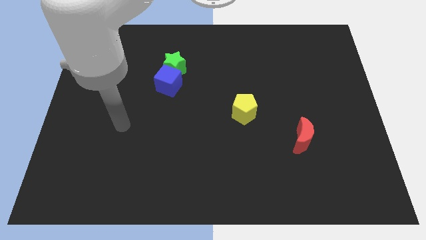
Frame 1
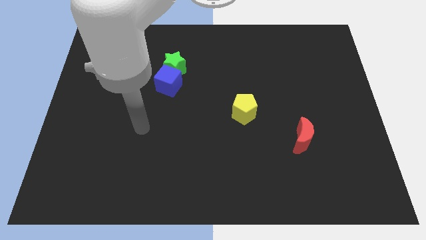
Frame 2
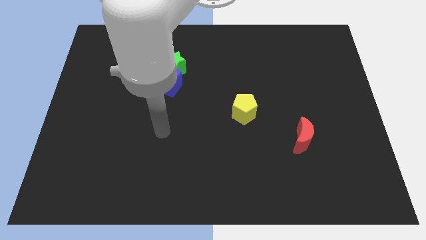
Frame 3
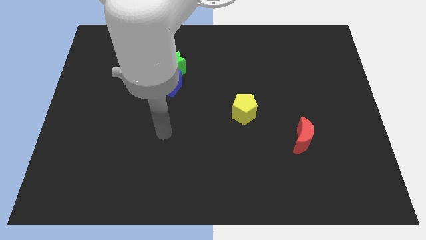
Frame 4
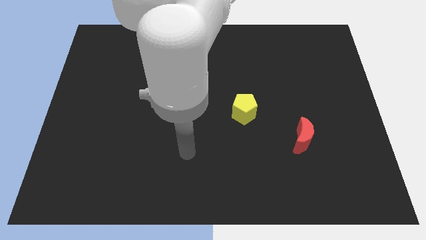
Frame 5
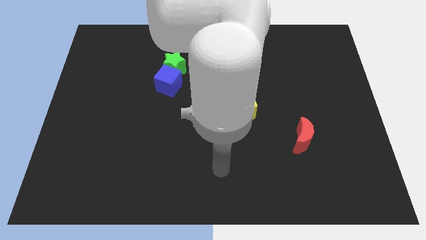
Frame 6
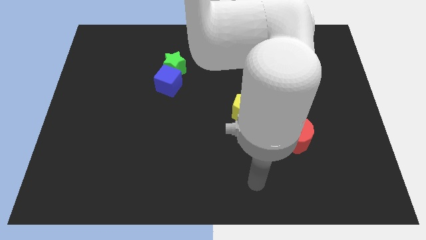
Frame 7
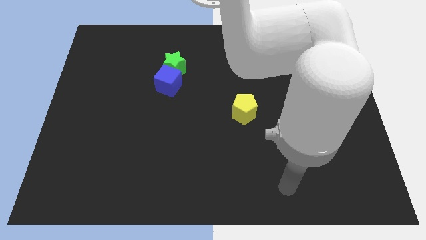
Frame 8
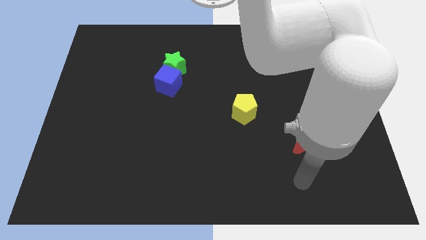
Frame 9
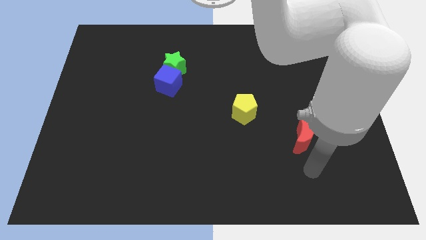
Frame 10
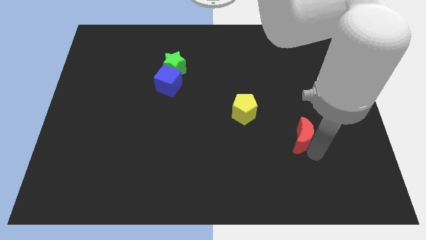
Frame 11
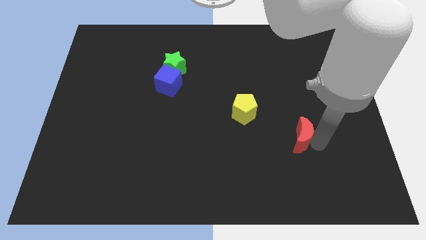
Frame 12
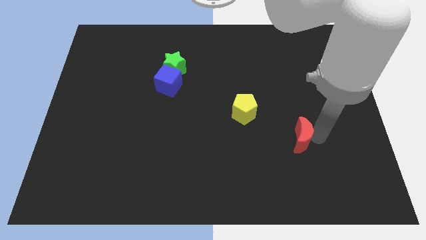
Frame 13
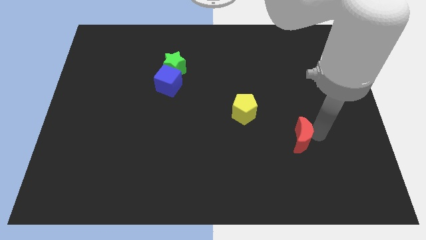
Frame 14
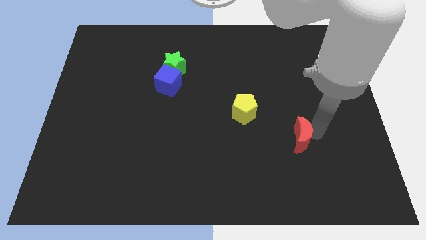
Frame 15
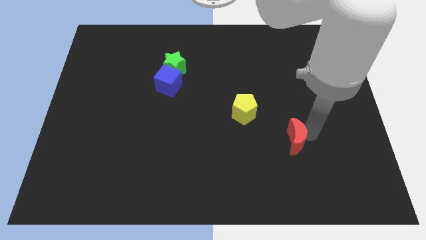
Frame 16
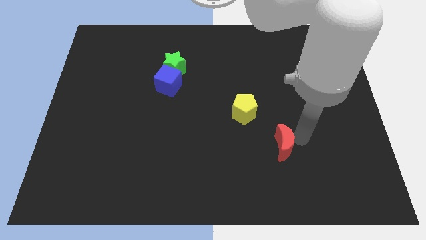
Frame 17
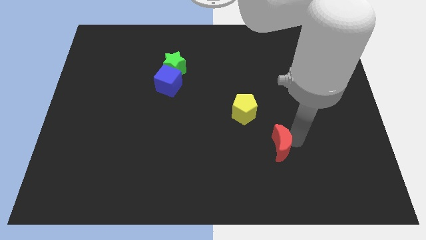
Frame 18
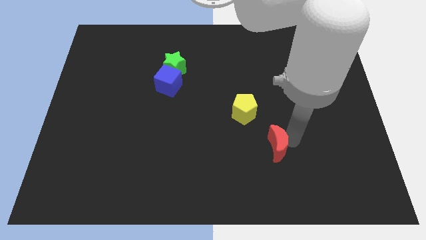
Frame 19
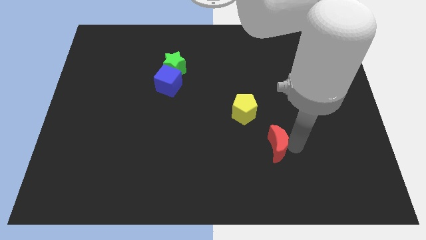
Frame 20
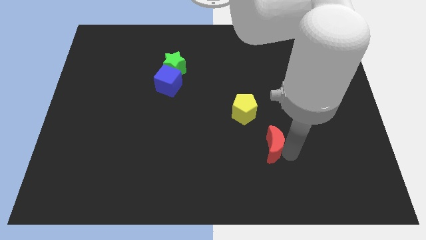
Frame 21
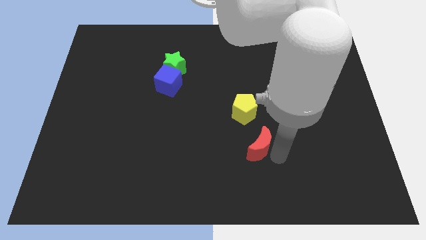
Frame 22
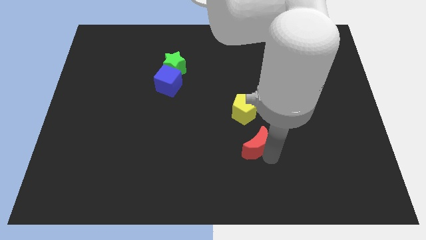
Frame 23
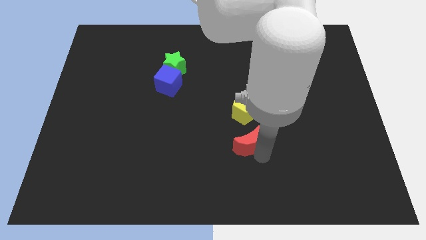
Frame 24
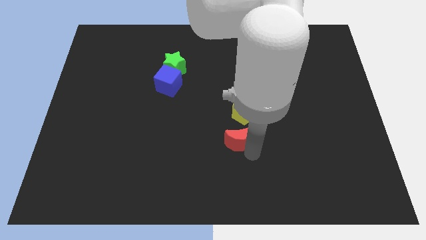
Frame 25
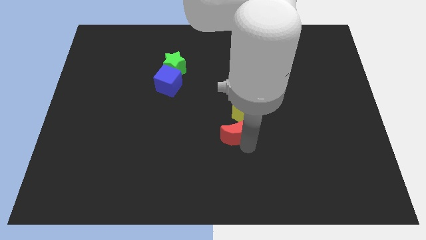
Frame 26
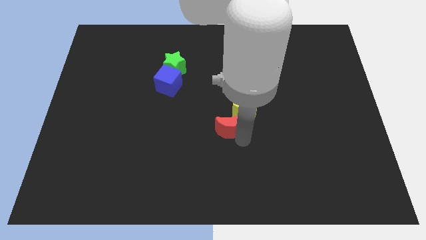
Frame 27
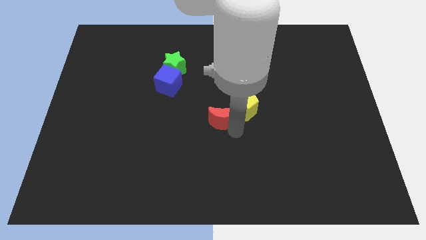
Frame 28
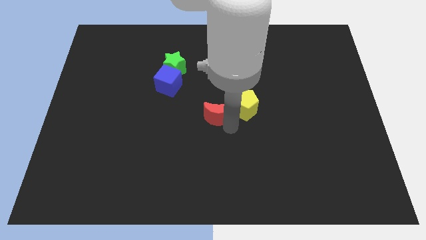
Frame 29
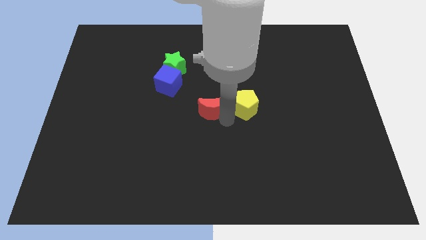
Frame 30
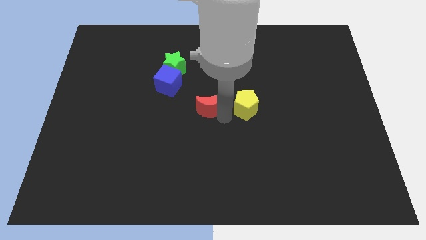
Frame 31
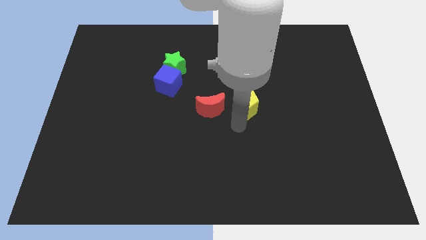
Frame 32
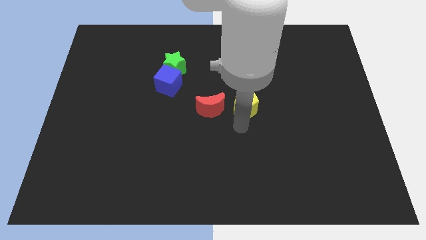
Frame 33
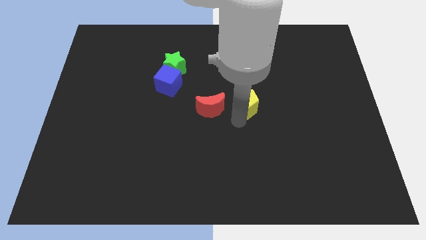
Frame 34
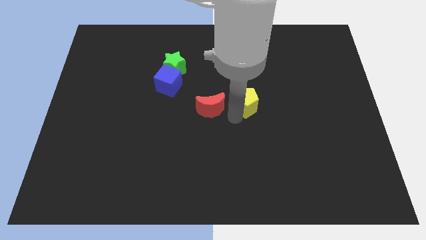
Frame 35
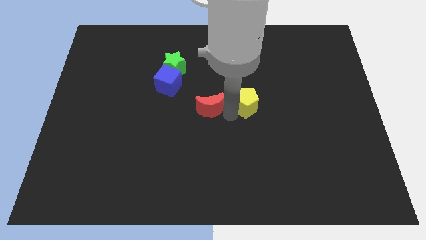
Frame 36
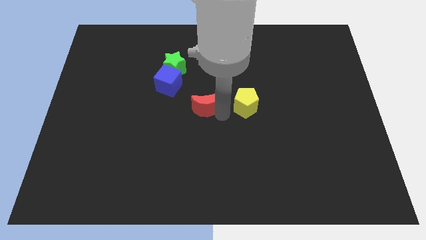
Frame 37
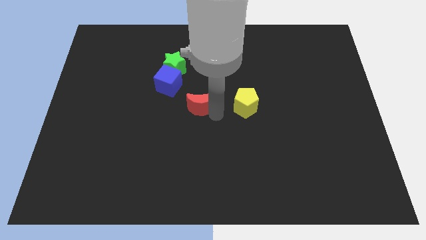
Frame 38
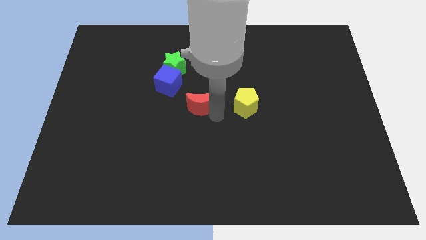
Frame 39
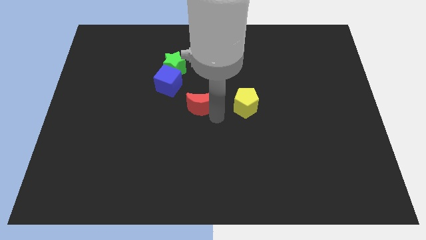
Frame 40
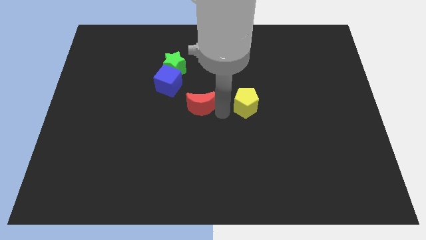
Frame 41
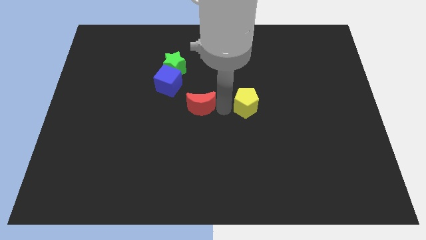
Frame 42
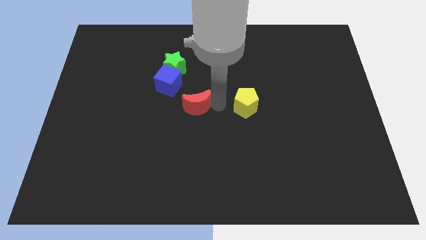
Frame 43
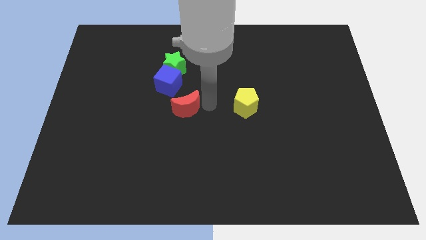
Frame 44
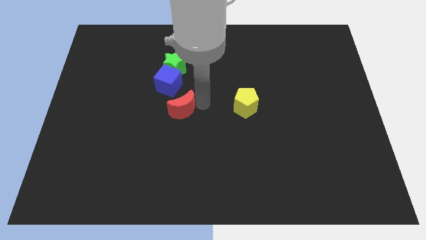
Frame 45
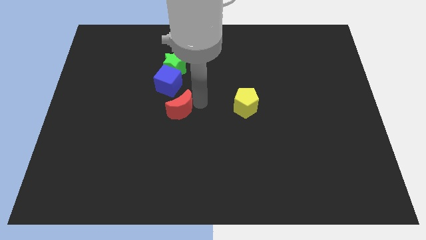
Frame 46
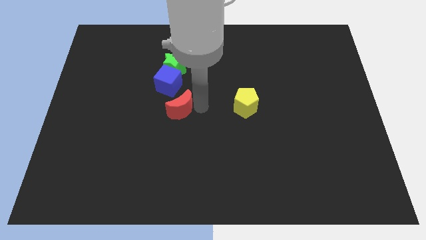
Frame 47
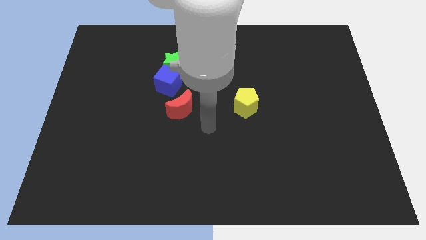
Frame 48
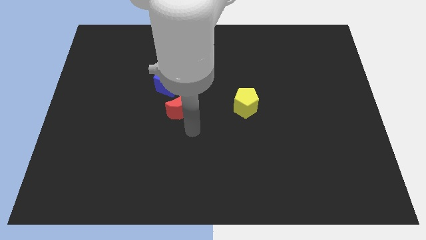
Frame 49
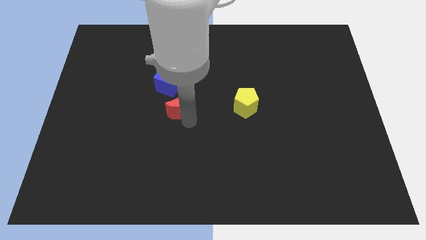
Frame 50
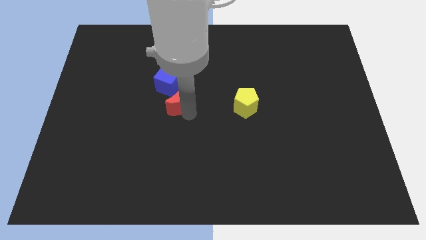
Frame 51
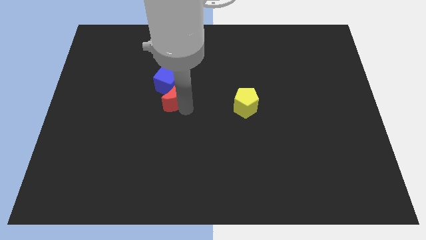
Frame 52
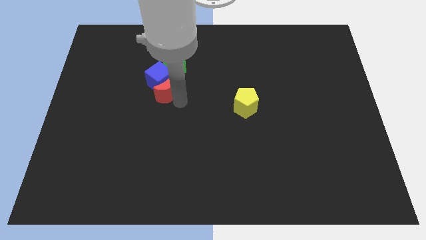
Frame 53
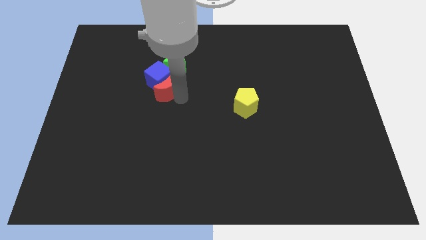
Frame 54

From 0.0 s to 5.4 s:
push the moon close to the blue cube

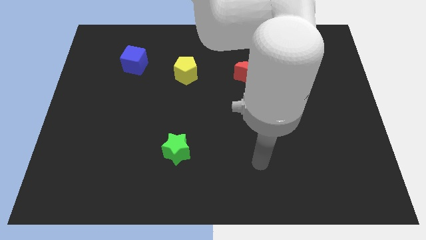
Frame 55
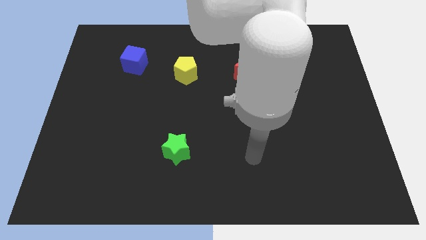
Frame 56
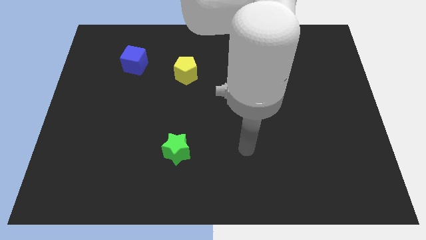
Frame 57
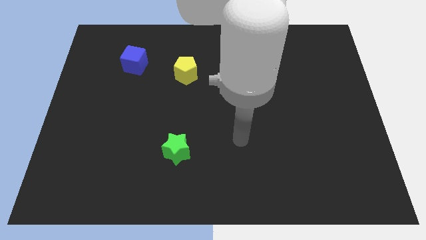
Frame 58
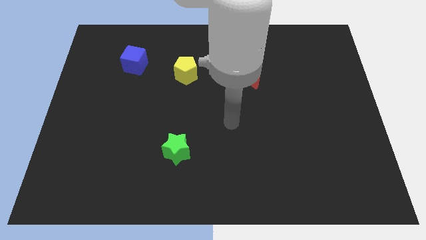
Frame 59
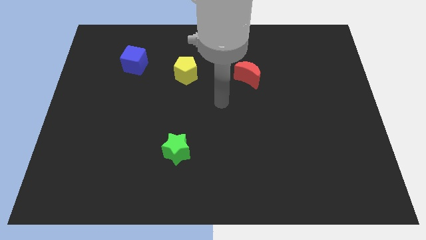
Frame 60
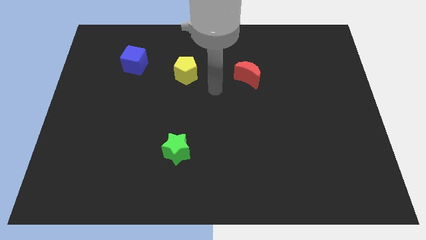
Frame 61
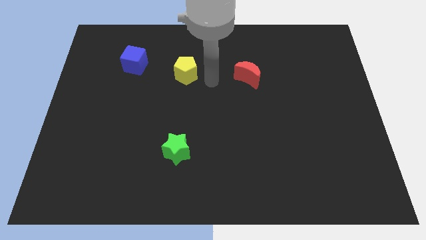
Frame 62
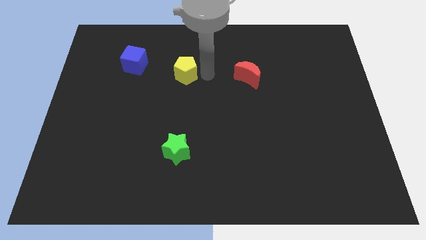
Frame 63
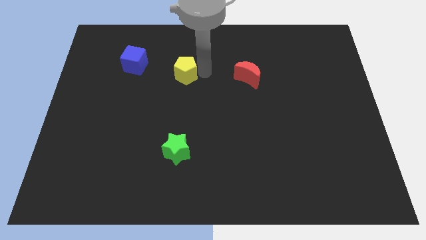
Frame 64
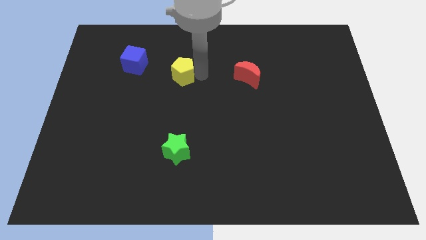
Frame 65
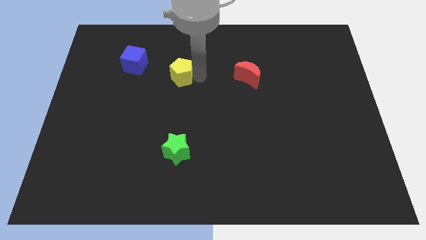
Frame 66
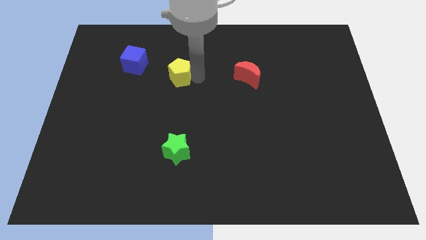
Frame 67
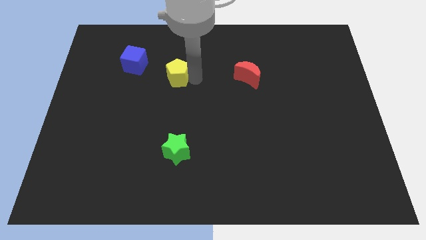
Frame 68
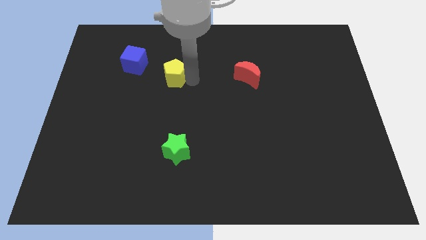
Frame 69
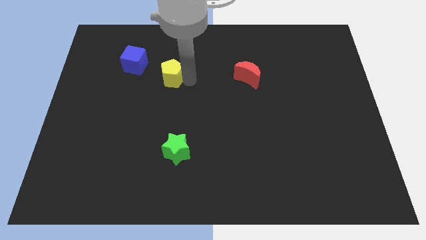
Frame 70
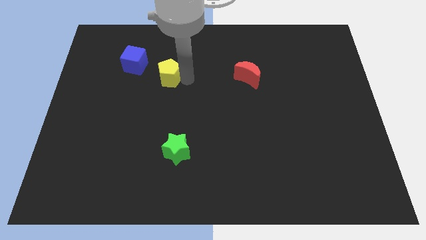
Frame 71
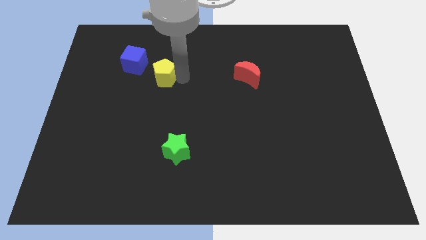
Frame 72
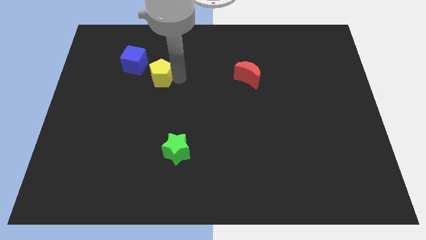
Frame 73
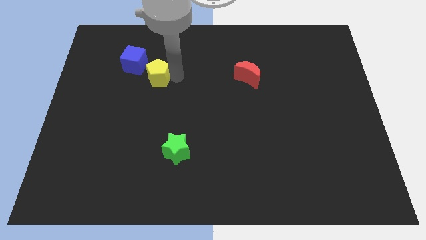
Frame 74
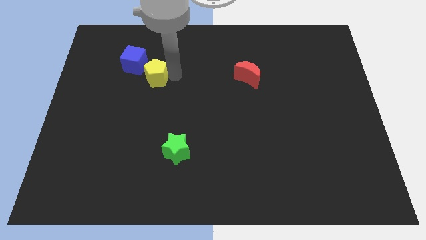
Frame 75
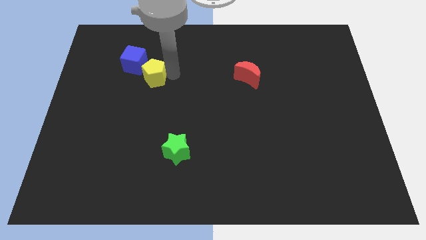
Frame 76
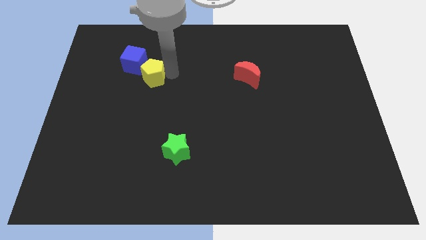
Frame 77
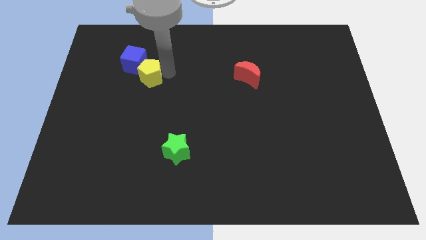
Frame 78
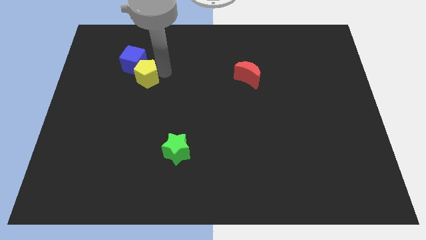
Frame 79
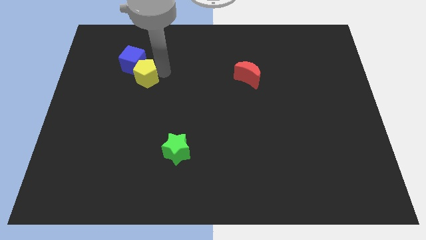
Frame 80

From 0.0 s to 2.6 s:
put the yellow pentagon to the blue block

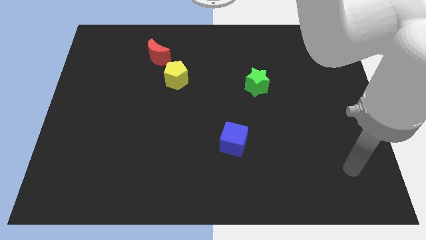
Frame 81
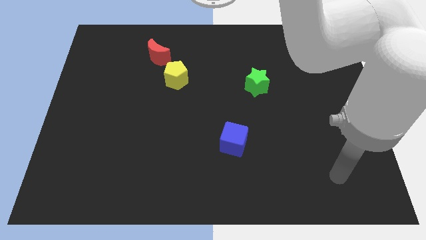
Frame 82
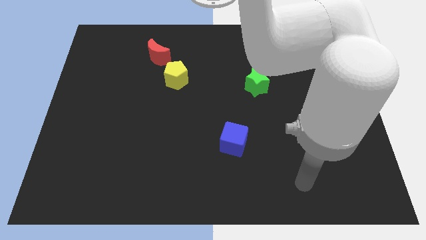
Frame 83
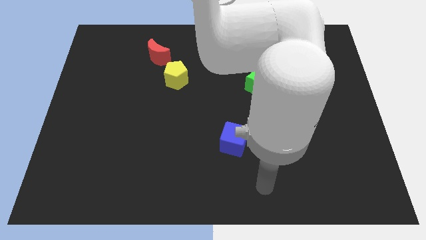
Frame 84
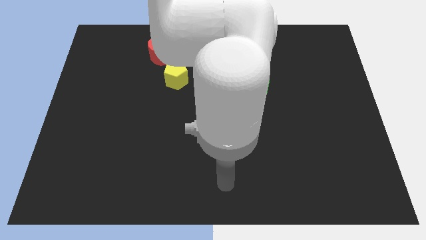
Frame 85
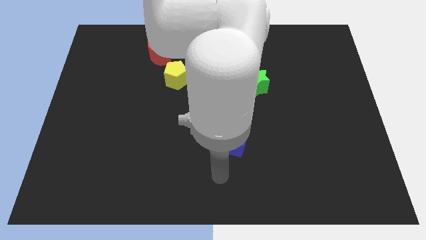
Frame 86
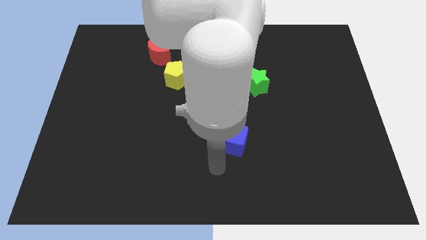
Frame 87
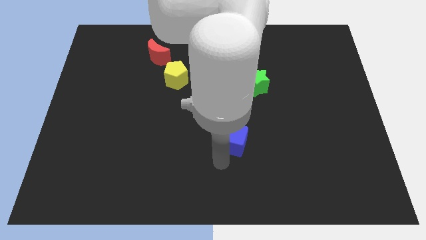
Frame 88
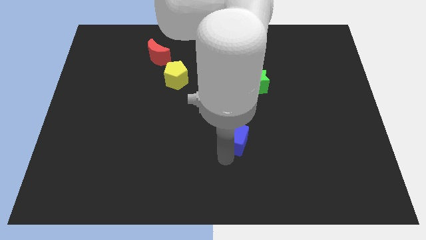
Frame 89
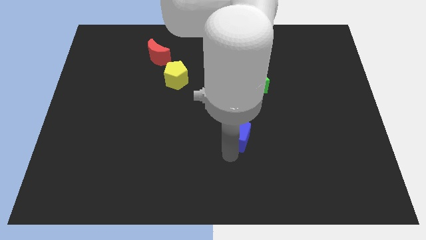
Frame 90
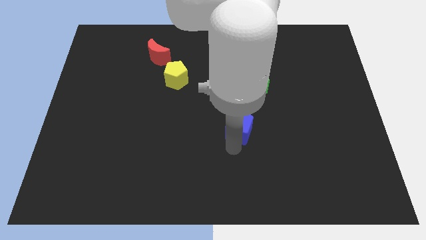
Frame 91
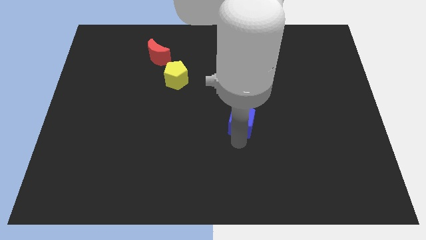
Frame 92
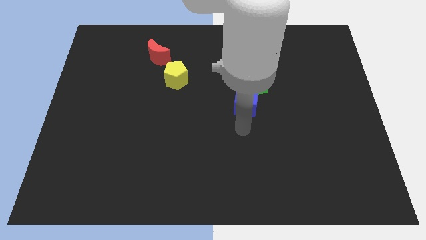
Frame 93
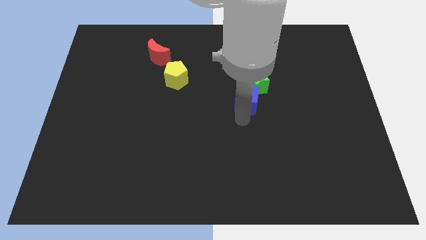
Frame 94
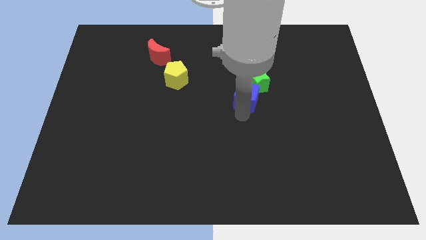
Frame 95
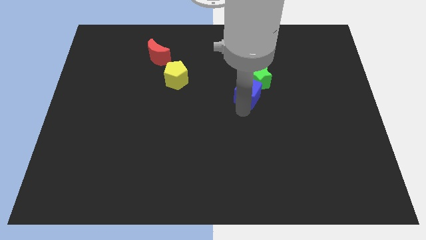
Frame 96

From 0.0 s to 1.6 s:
put the blue block next to the green block
